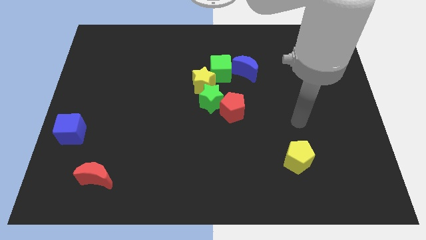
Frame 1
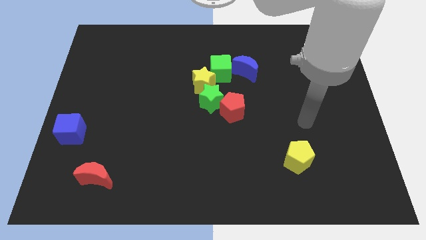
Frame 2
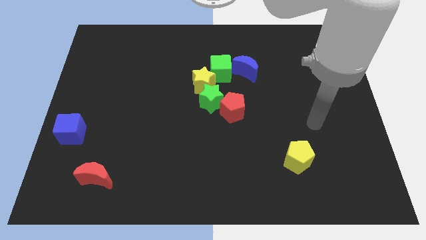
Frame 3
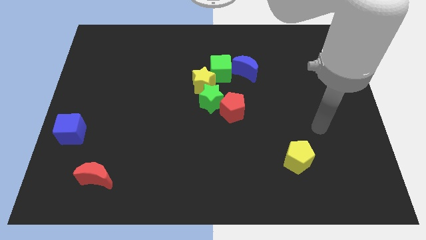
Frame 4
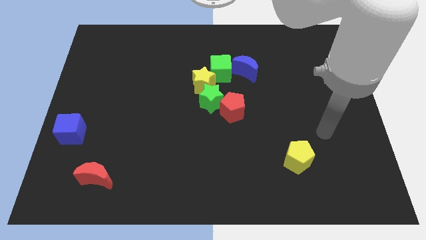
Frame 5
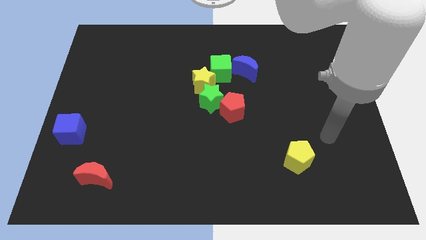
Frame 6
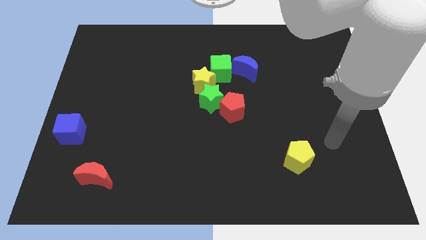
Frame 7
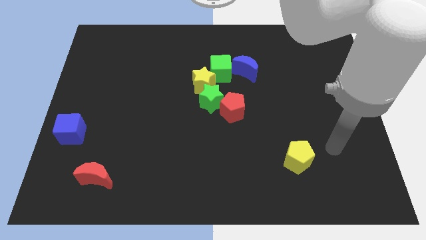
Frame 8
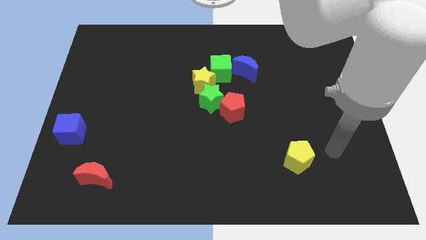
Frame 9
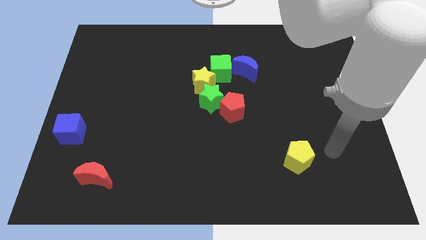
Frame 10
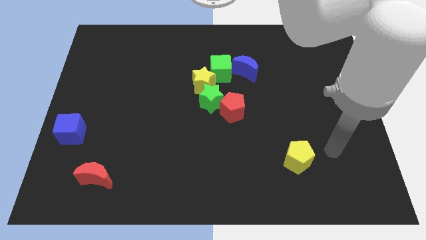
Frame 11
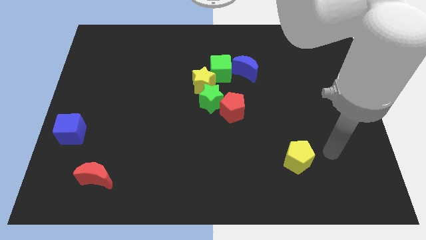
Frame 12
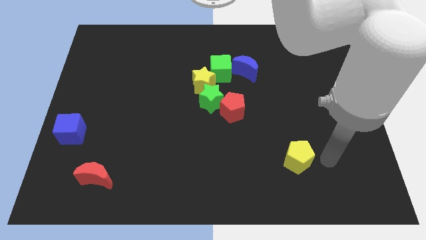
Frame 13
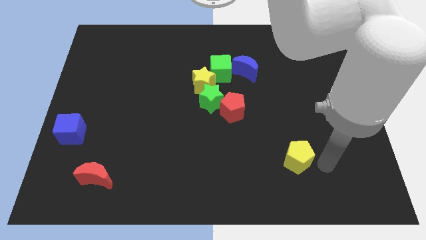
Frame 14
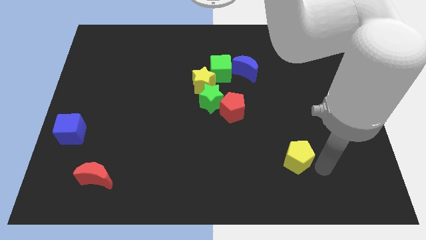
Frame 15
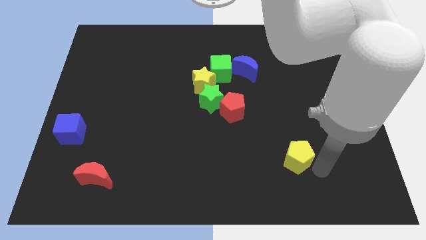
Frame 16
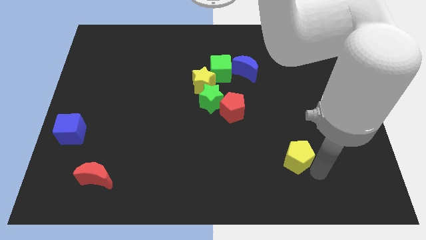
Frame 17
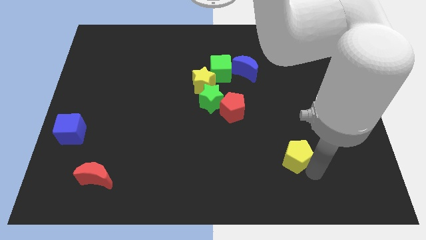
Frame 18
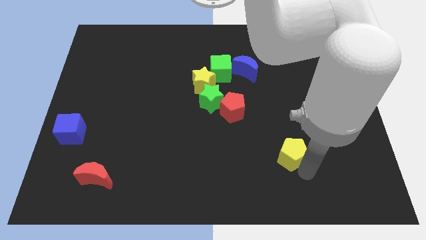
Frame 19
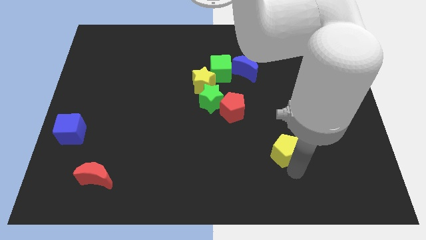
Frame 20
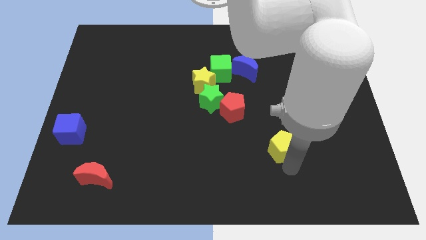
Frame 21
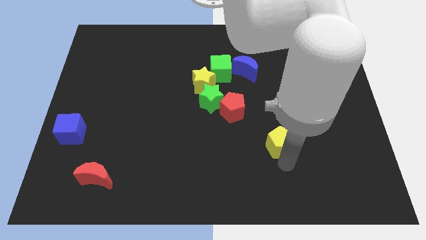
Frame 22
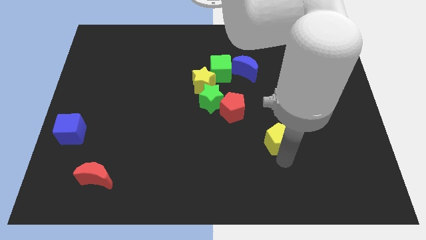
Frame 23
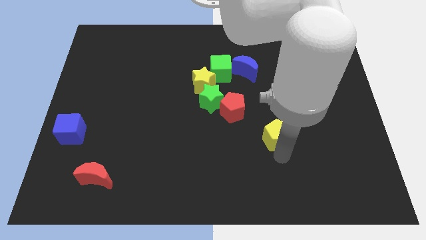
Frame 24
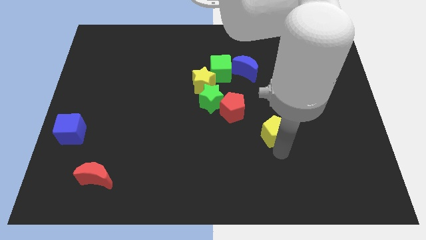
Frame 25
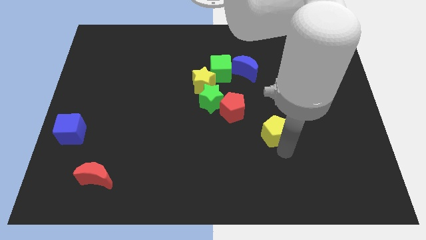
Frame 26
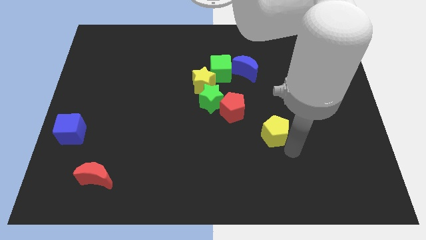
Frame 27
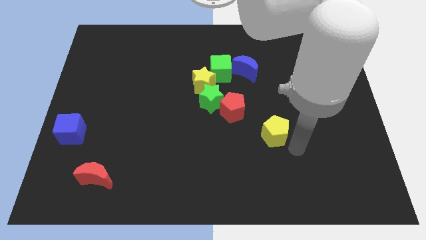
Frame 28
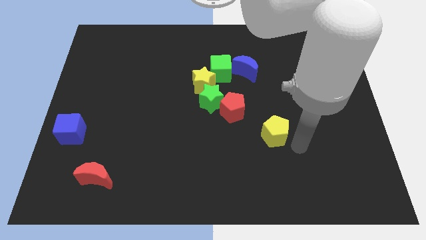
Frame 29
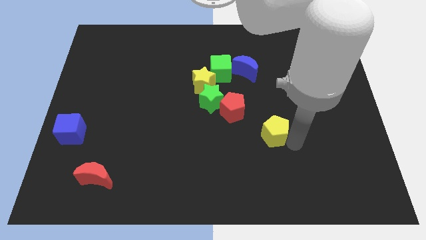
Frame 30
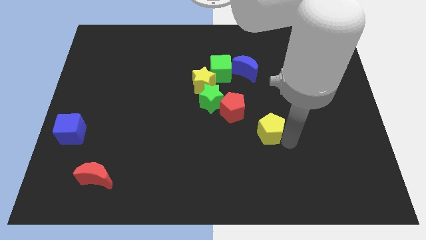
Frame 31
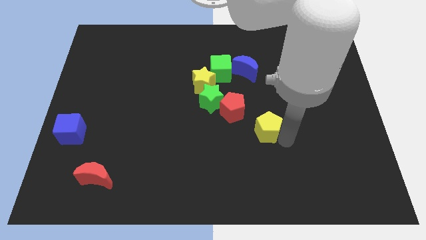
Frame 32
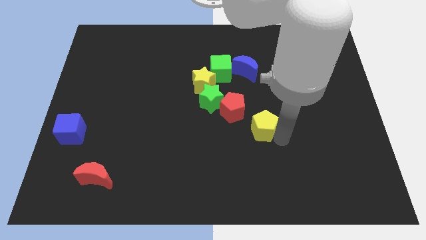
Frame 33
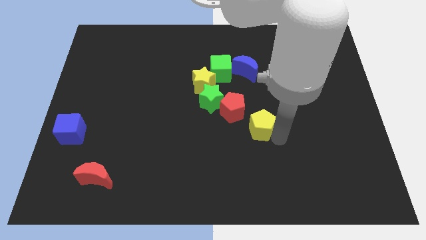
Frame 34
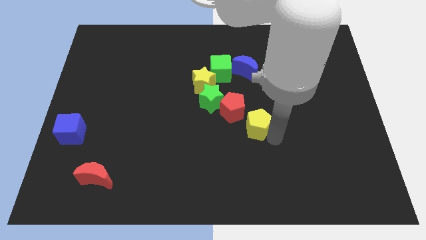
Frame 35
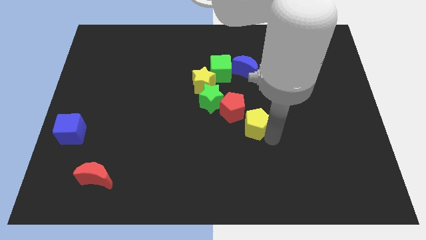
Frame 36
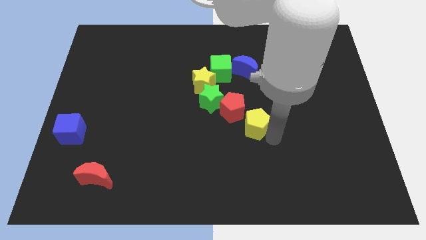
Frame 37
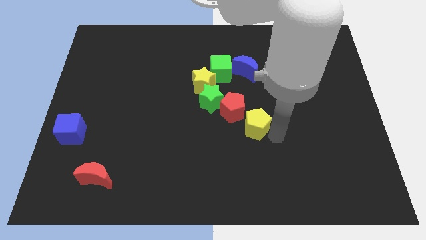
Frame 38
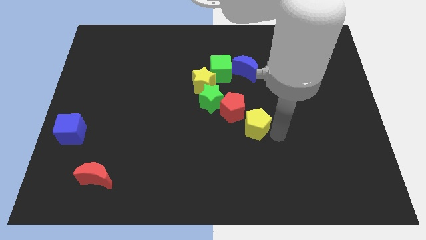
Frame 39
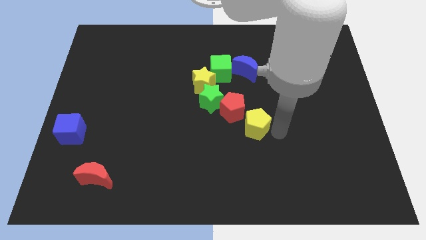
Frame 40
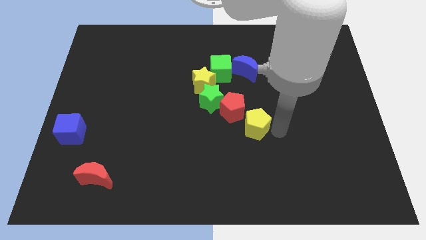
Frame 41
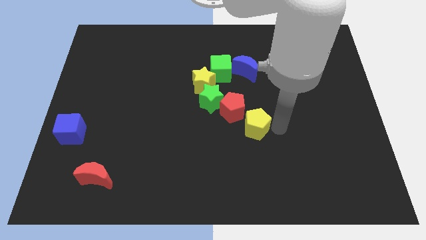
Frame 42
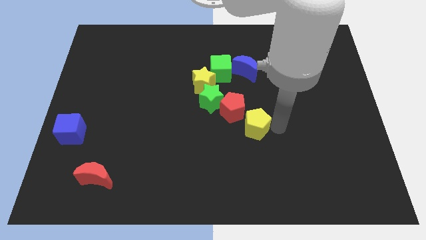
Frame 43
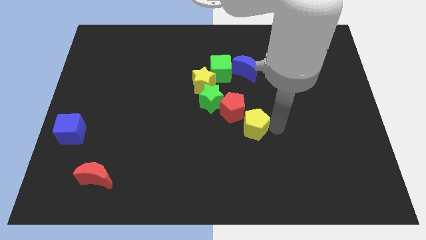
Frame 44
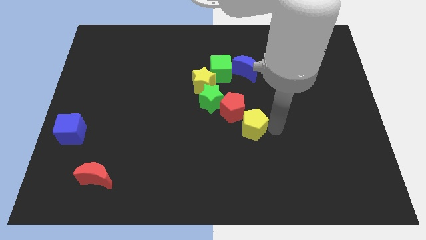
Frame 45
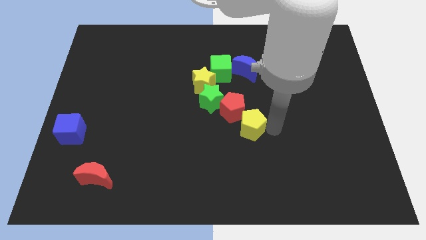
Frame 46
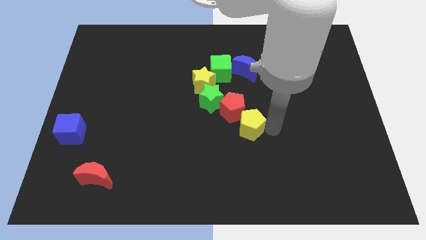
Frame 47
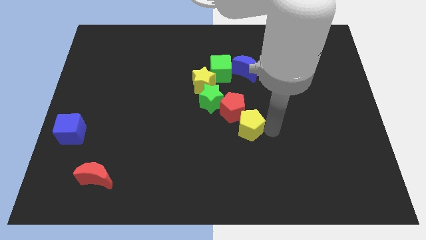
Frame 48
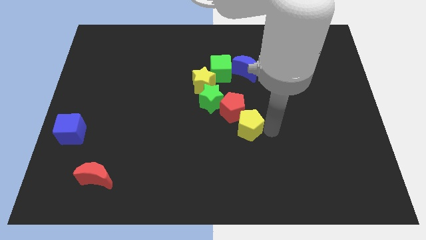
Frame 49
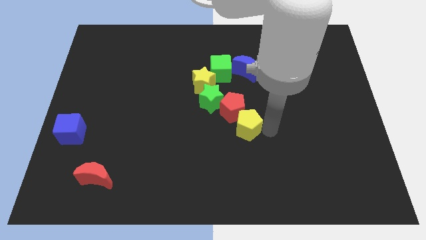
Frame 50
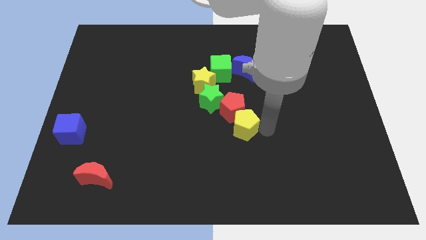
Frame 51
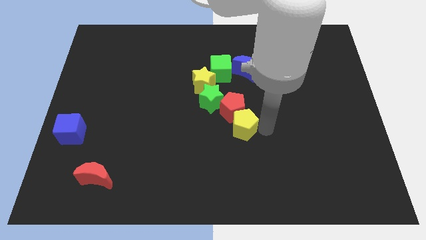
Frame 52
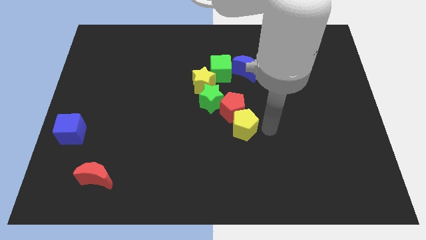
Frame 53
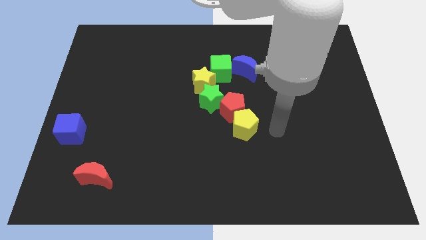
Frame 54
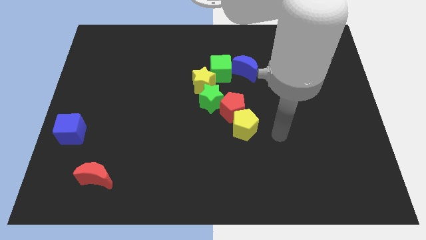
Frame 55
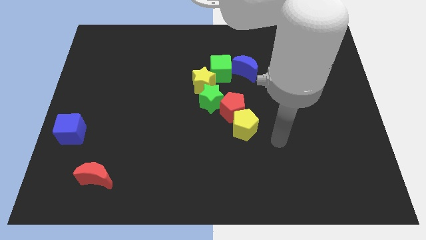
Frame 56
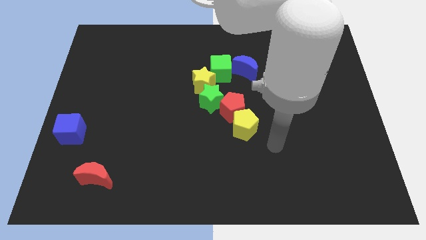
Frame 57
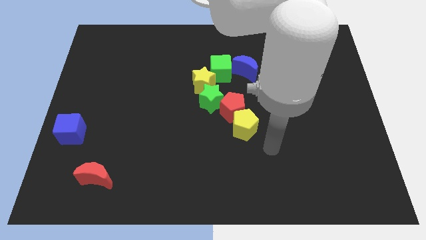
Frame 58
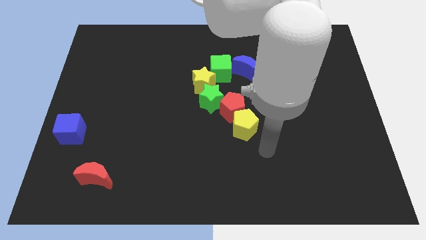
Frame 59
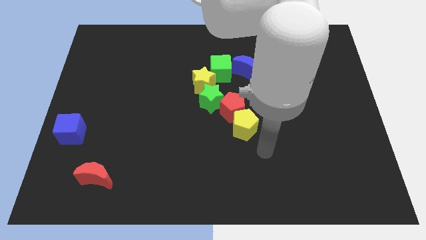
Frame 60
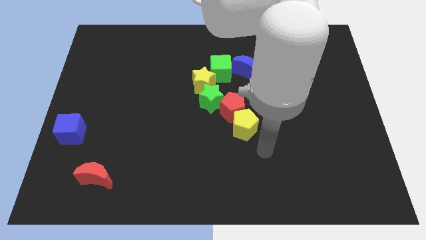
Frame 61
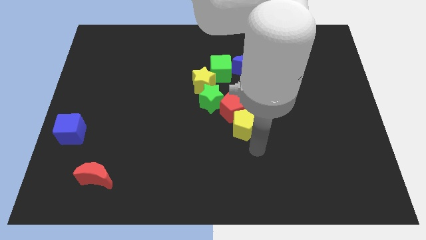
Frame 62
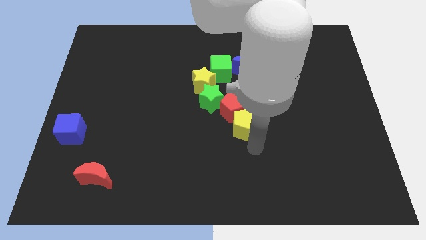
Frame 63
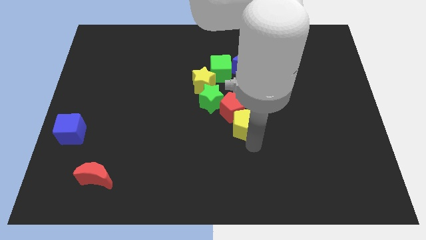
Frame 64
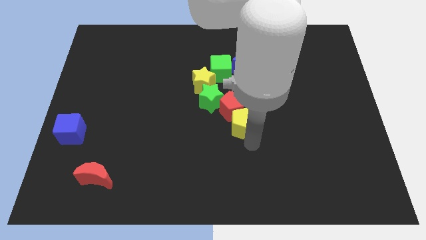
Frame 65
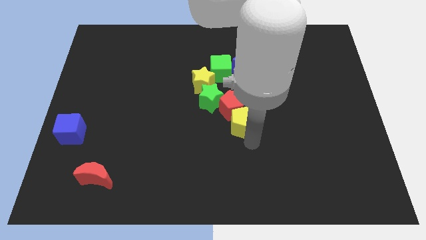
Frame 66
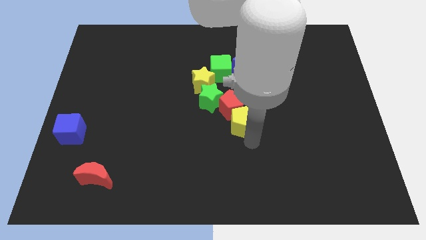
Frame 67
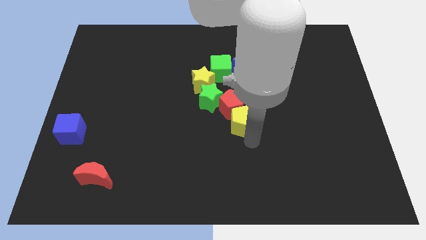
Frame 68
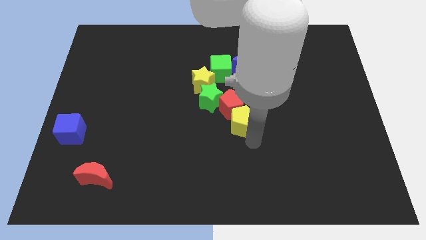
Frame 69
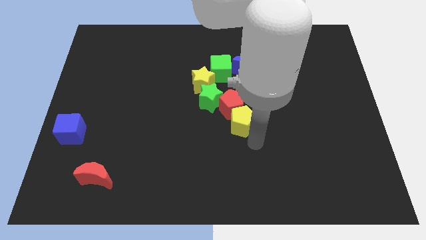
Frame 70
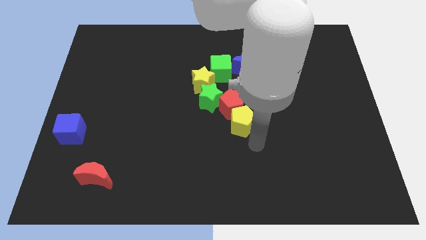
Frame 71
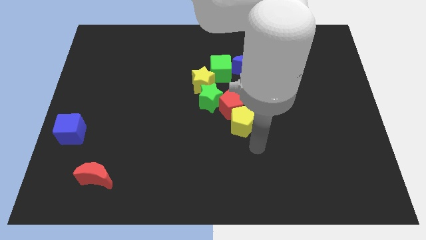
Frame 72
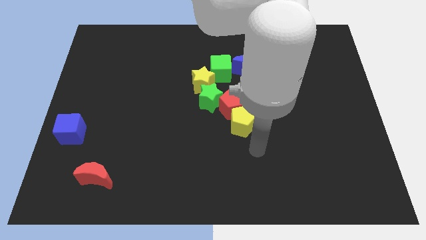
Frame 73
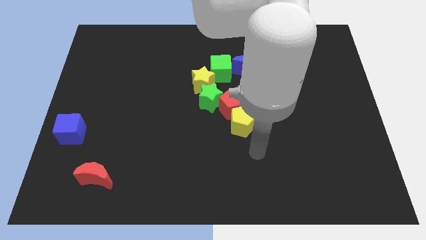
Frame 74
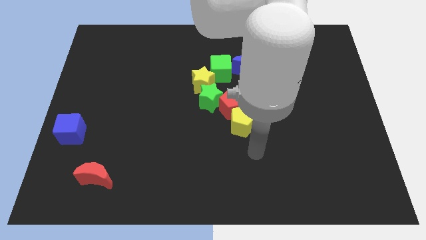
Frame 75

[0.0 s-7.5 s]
push the yellow pentagon into the red pentagon

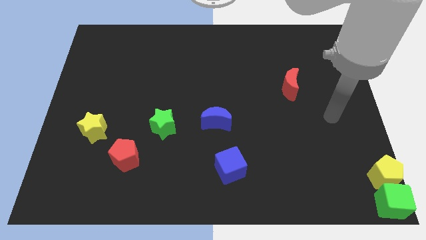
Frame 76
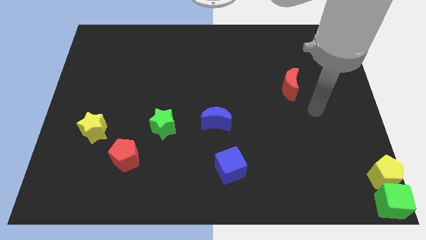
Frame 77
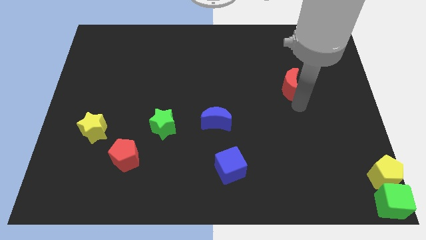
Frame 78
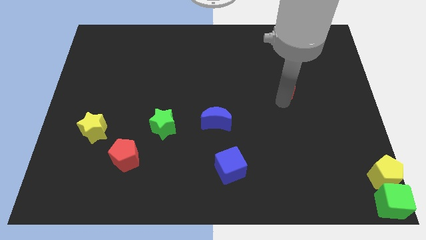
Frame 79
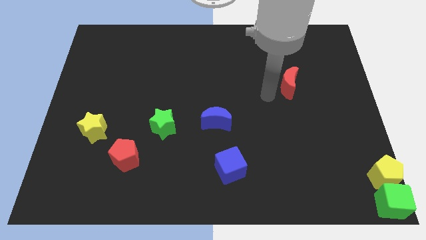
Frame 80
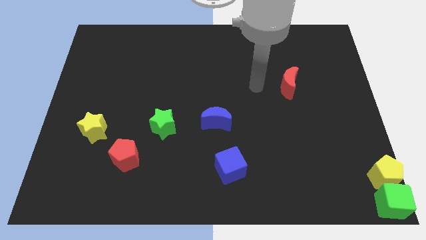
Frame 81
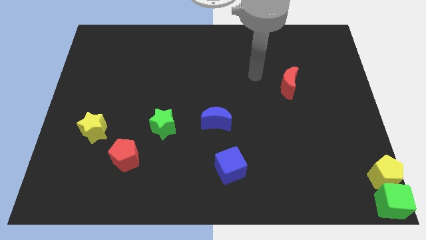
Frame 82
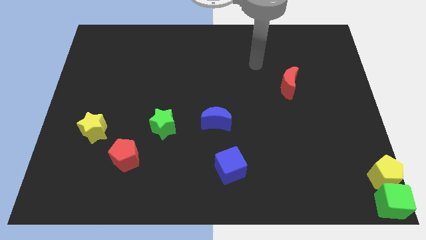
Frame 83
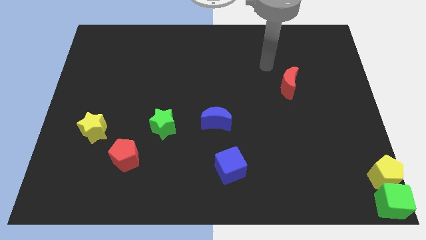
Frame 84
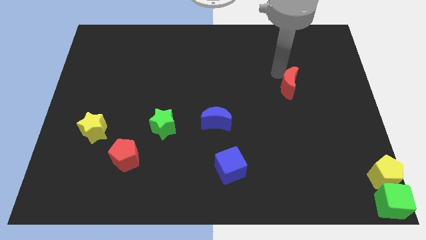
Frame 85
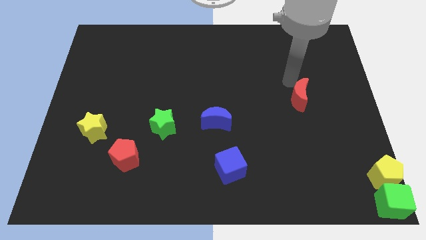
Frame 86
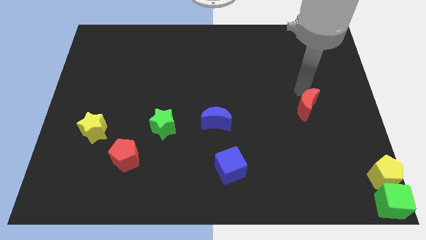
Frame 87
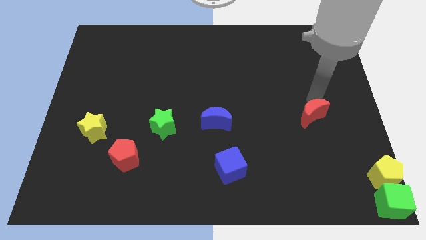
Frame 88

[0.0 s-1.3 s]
place the red crescent to the right of the blue crescent

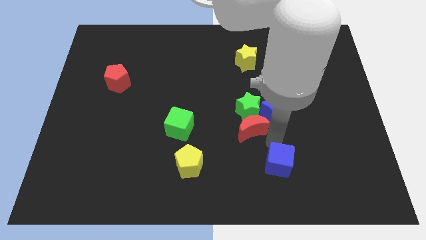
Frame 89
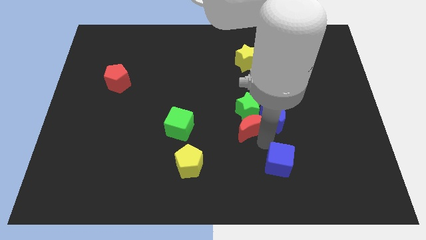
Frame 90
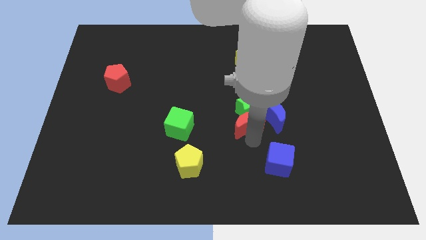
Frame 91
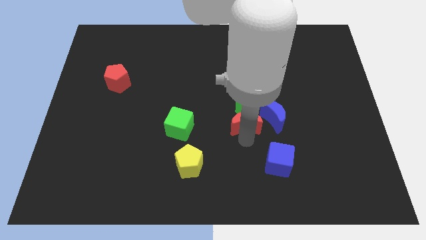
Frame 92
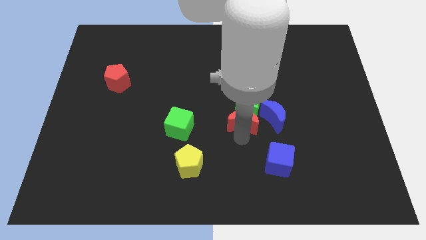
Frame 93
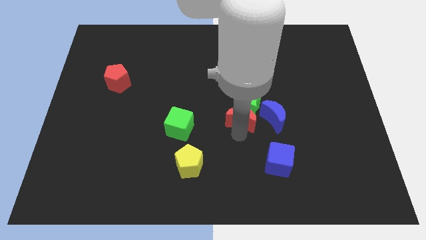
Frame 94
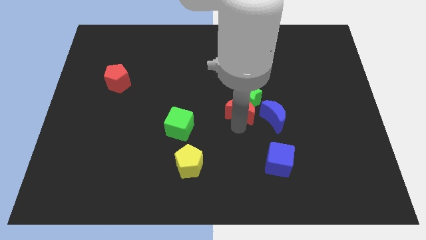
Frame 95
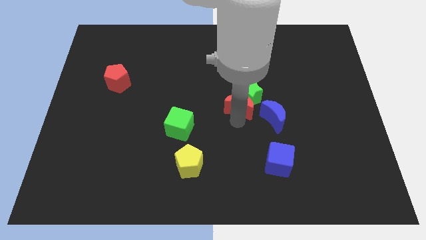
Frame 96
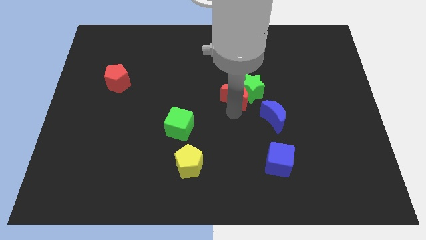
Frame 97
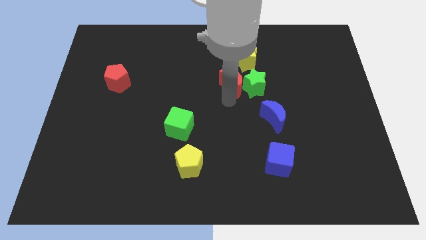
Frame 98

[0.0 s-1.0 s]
push green star with red crescent
